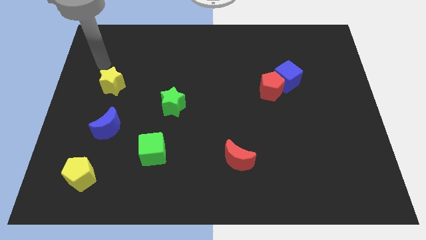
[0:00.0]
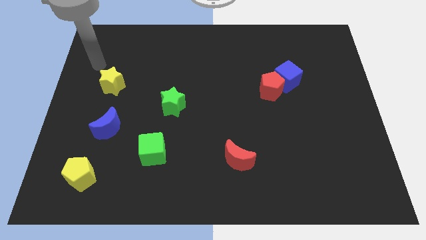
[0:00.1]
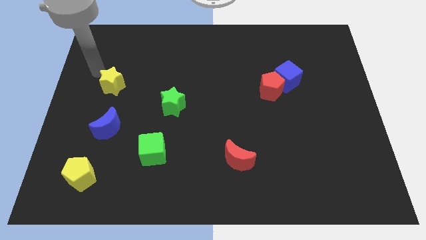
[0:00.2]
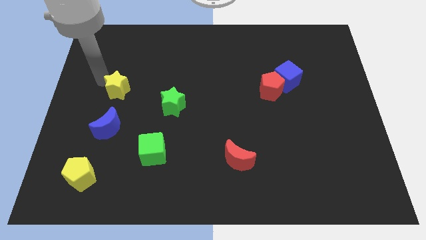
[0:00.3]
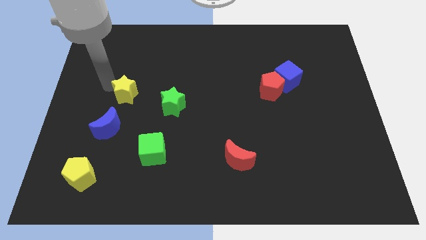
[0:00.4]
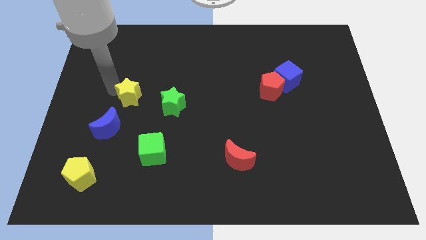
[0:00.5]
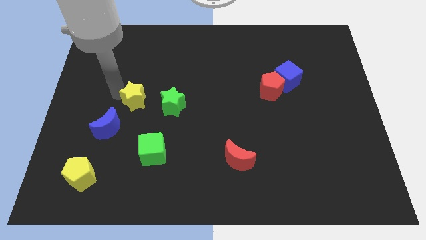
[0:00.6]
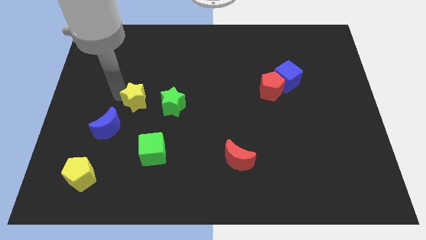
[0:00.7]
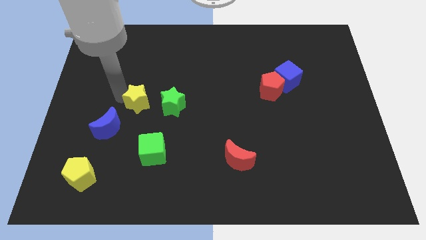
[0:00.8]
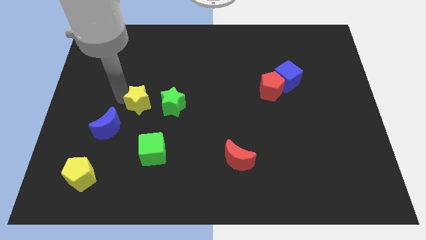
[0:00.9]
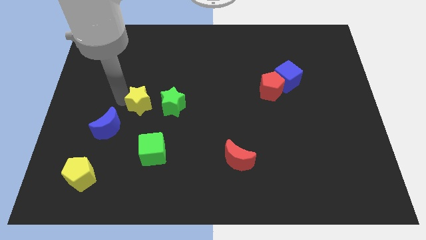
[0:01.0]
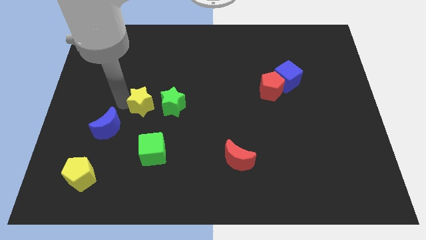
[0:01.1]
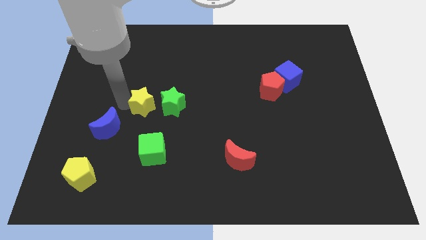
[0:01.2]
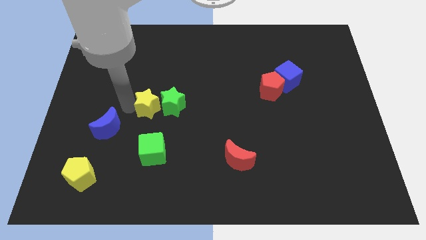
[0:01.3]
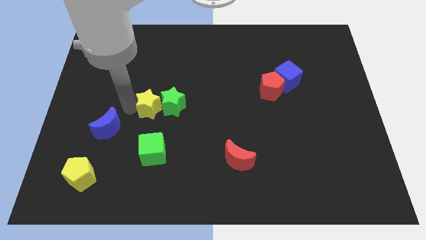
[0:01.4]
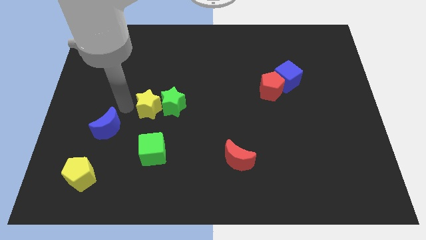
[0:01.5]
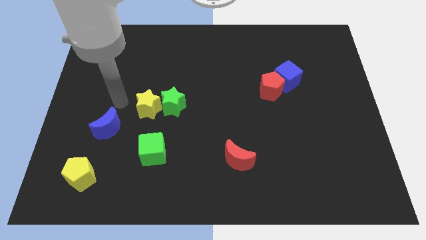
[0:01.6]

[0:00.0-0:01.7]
slide yellow star parallel left to the green star

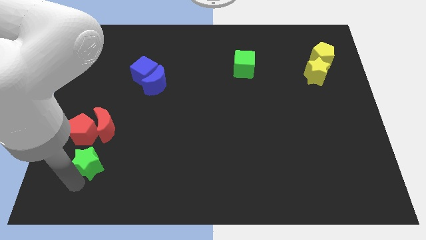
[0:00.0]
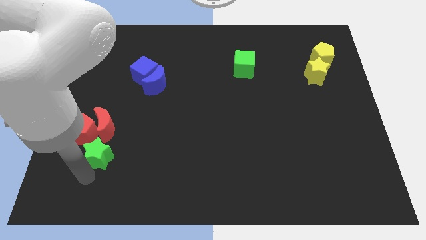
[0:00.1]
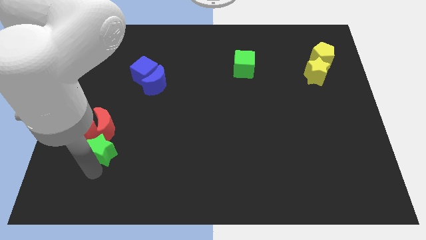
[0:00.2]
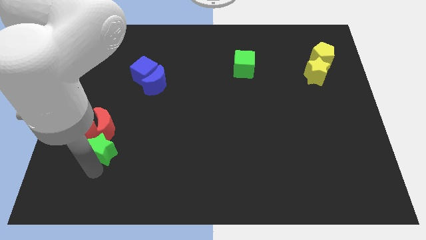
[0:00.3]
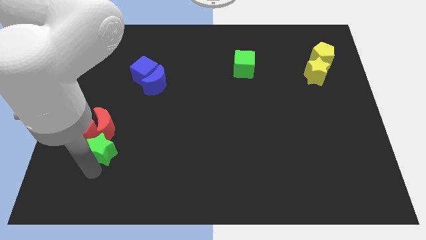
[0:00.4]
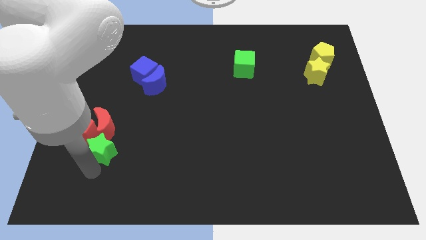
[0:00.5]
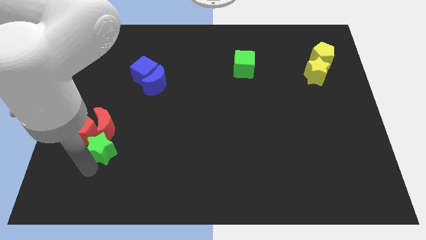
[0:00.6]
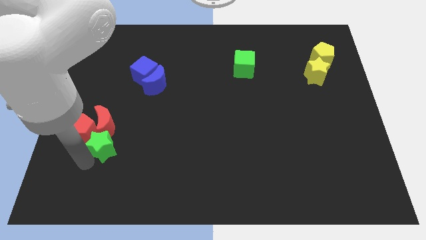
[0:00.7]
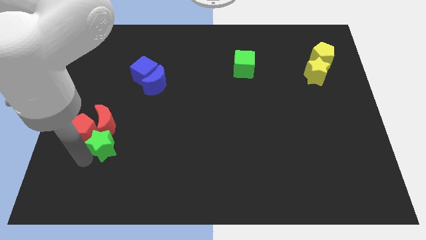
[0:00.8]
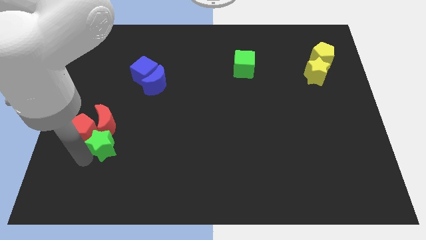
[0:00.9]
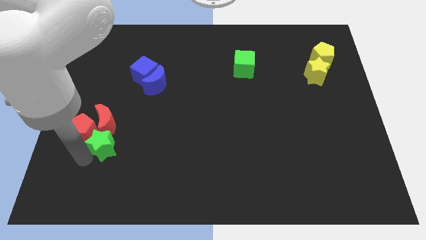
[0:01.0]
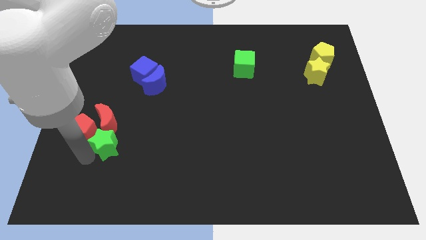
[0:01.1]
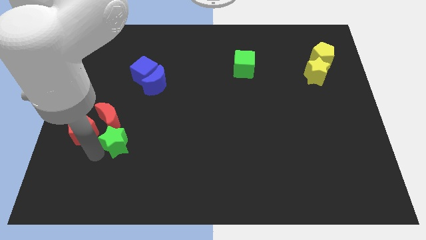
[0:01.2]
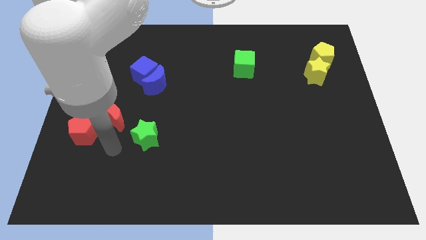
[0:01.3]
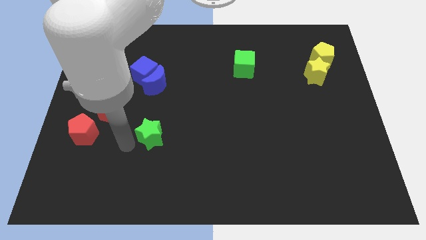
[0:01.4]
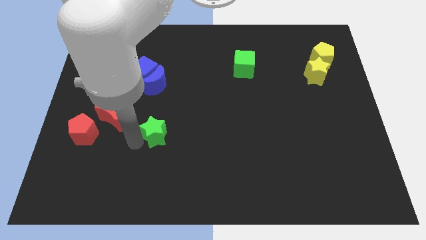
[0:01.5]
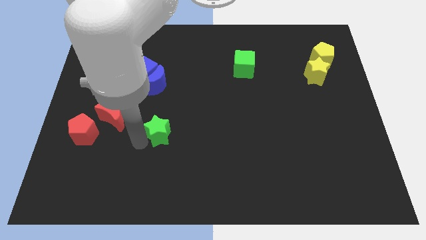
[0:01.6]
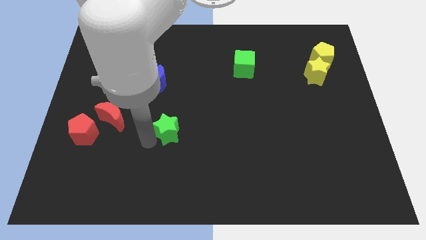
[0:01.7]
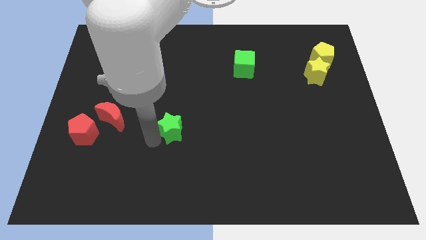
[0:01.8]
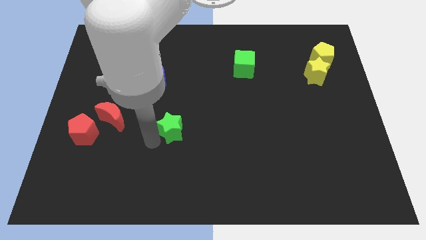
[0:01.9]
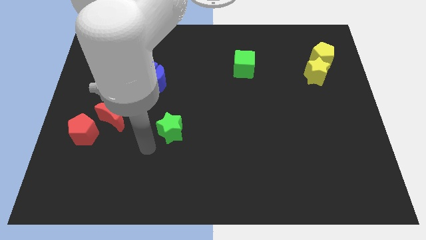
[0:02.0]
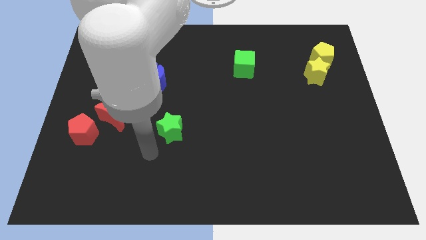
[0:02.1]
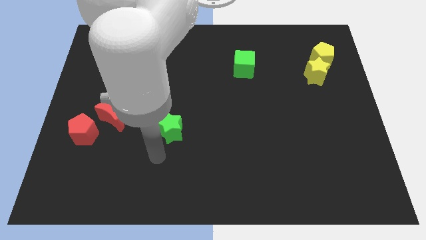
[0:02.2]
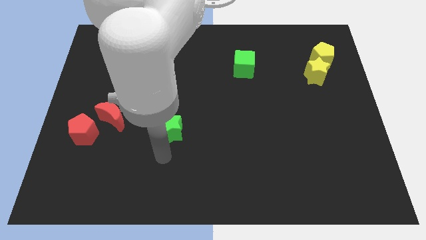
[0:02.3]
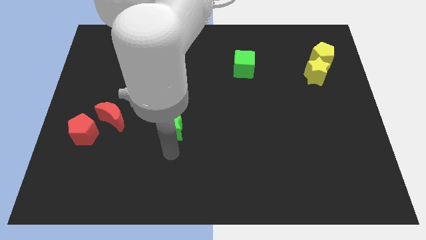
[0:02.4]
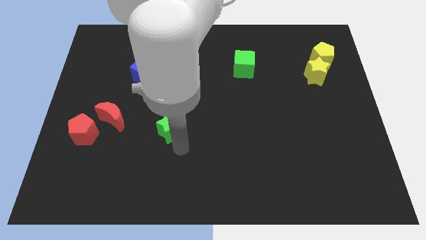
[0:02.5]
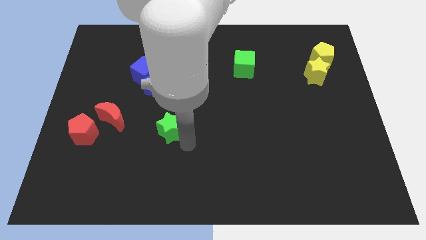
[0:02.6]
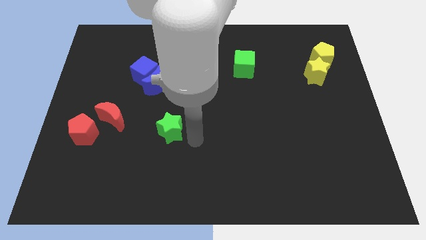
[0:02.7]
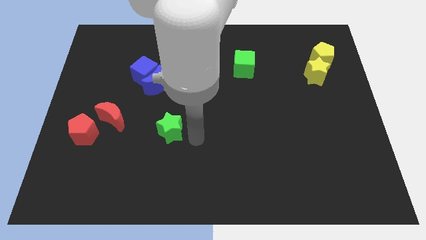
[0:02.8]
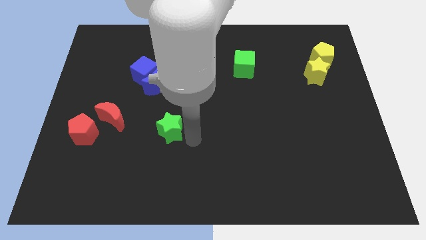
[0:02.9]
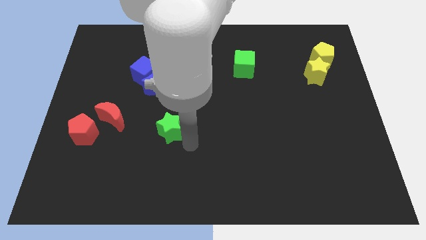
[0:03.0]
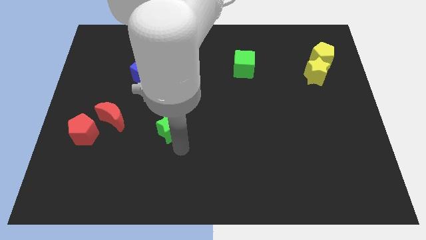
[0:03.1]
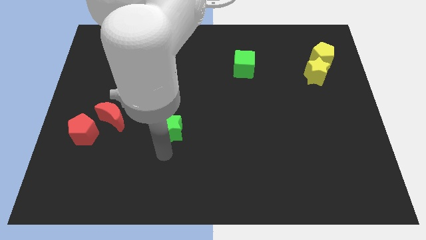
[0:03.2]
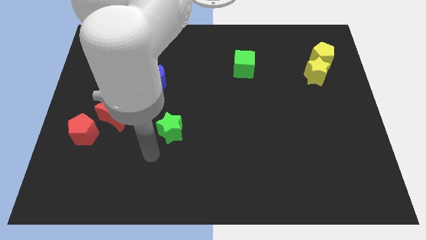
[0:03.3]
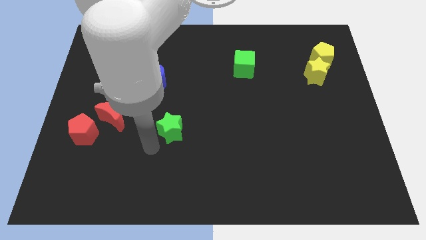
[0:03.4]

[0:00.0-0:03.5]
place the green star to the right of red moon

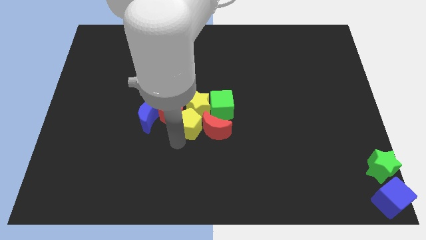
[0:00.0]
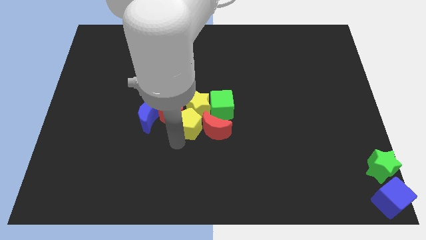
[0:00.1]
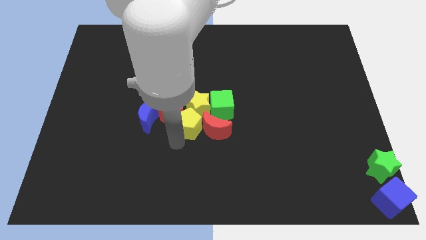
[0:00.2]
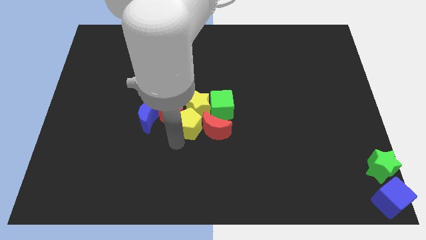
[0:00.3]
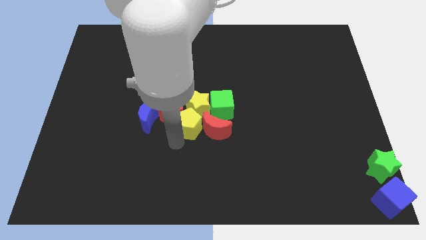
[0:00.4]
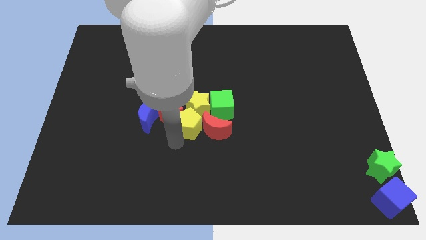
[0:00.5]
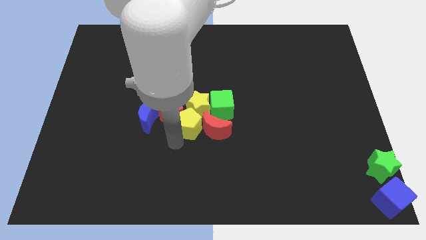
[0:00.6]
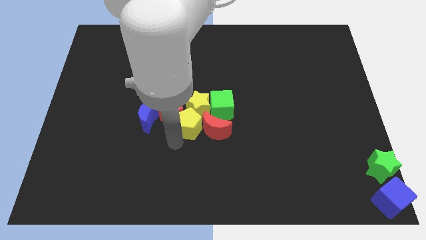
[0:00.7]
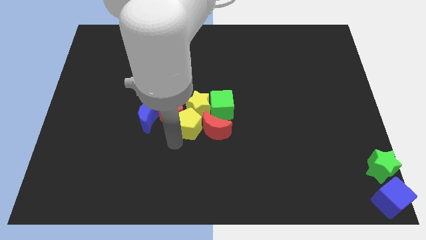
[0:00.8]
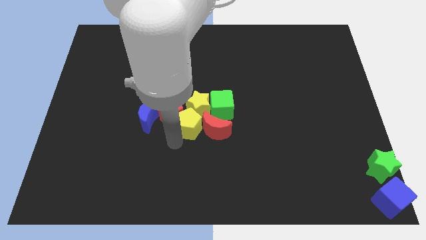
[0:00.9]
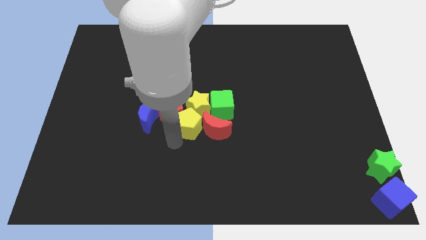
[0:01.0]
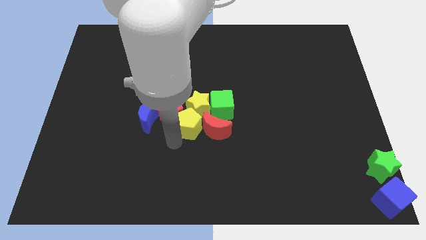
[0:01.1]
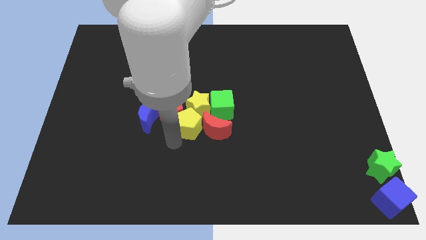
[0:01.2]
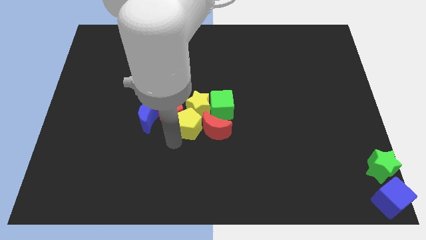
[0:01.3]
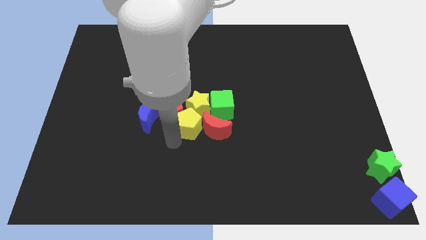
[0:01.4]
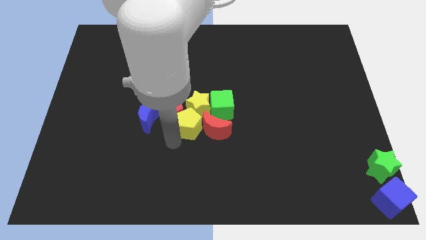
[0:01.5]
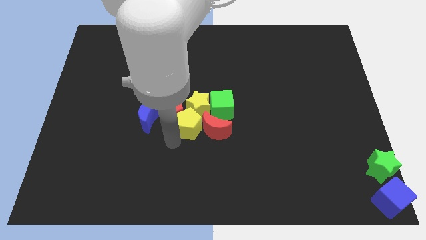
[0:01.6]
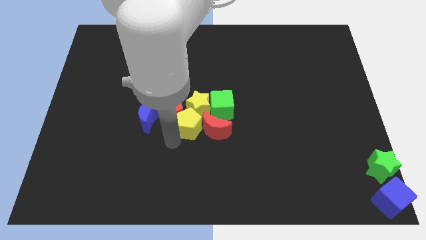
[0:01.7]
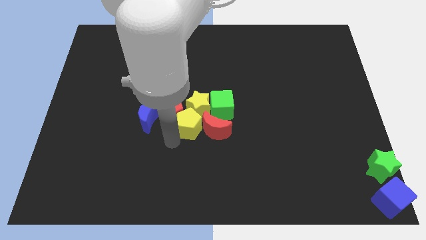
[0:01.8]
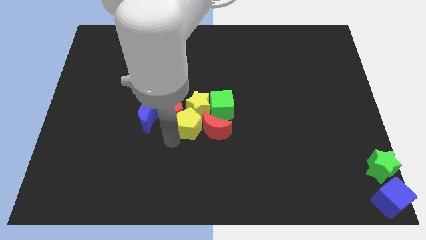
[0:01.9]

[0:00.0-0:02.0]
stand at the block of groups

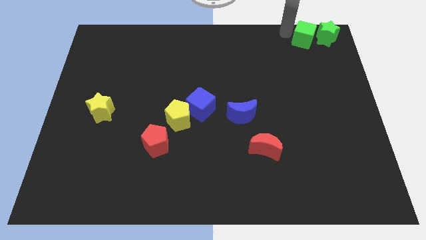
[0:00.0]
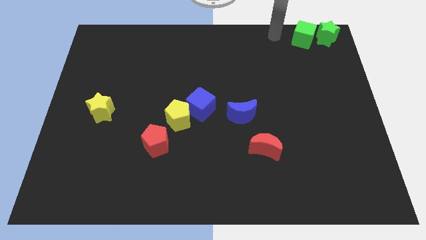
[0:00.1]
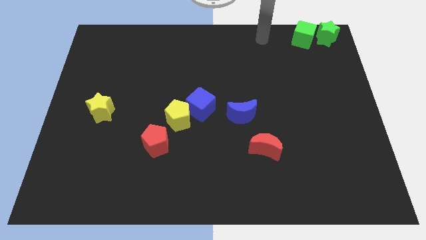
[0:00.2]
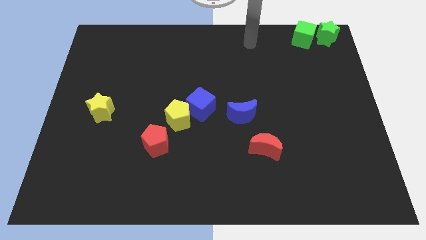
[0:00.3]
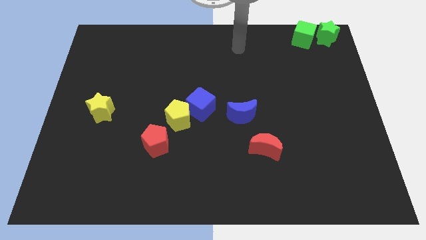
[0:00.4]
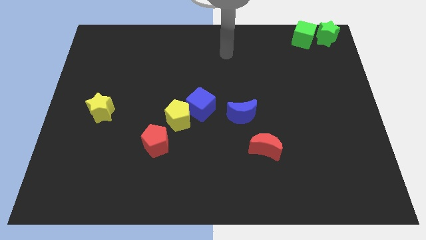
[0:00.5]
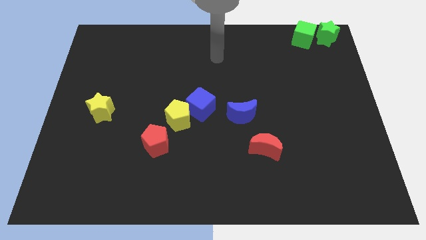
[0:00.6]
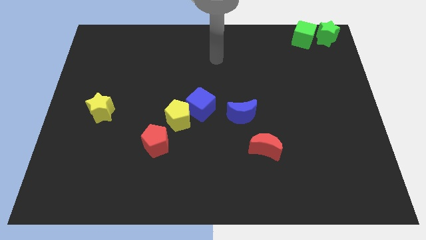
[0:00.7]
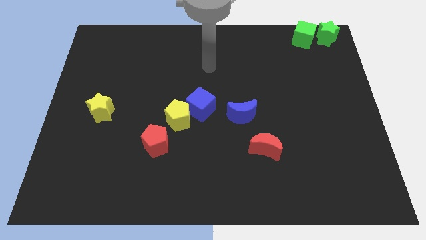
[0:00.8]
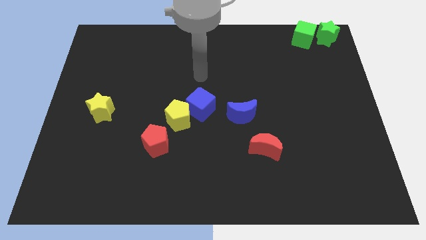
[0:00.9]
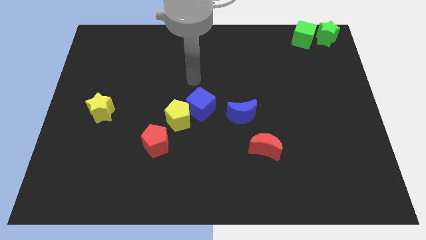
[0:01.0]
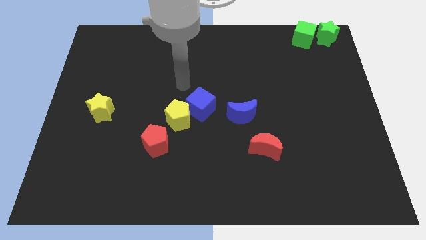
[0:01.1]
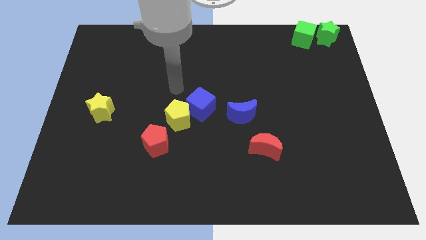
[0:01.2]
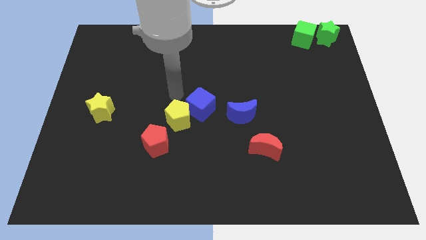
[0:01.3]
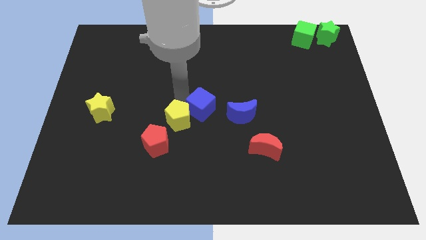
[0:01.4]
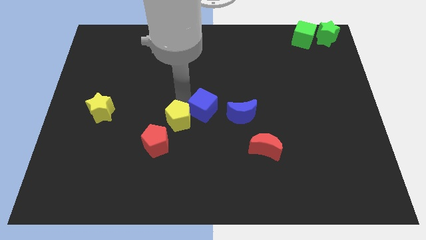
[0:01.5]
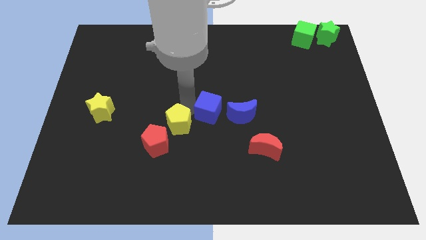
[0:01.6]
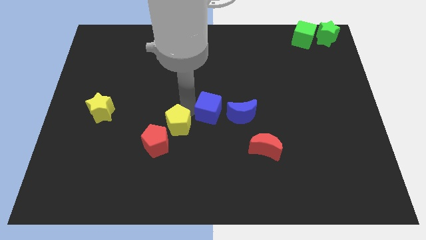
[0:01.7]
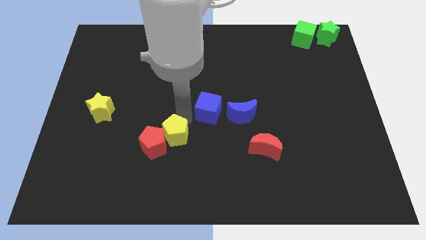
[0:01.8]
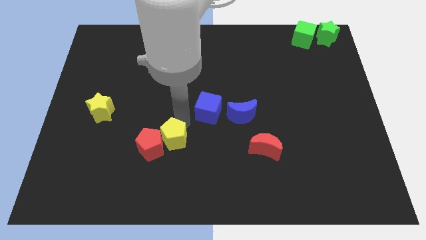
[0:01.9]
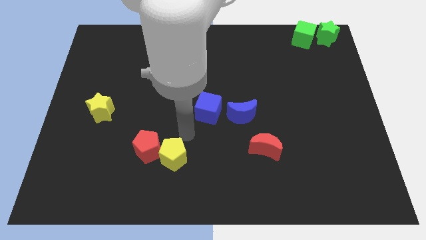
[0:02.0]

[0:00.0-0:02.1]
move your arm to the top of the yellow pentagon
